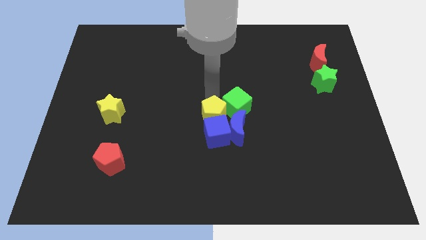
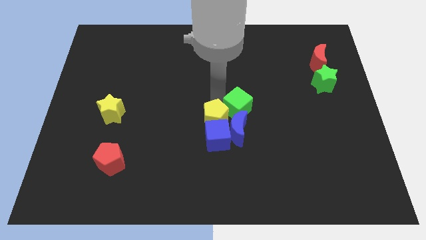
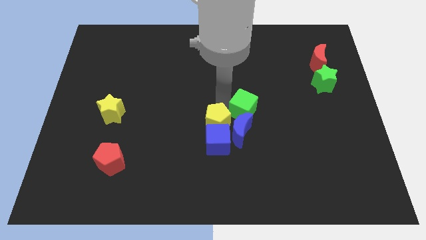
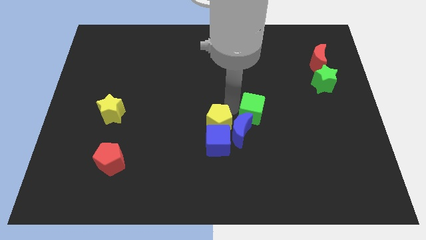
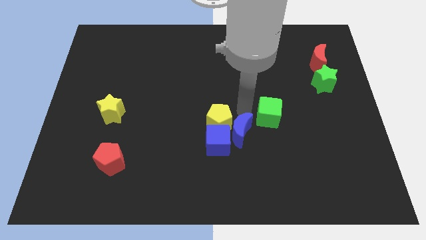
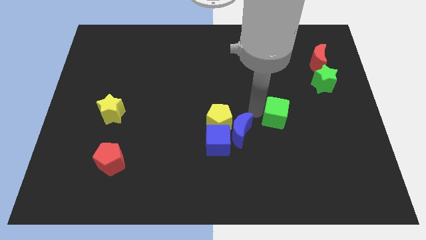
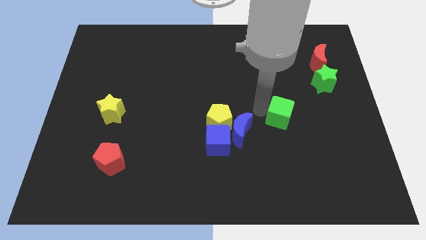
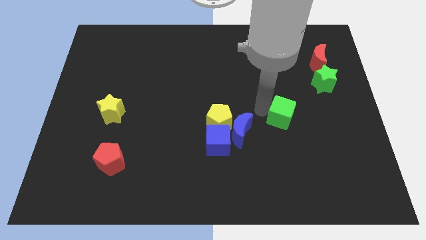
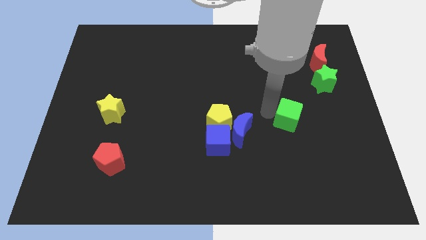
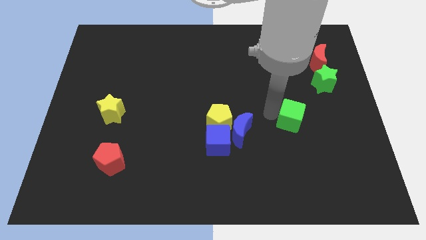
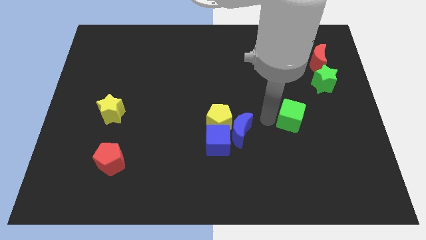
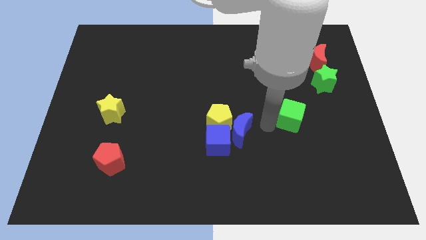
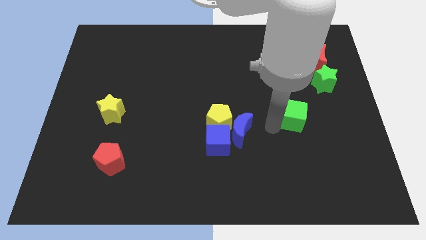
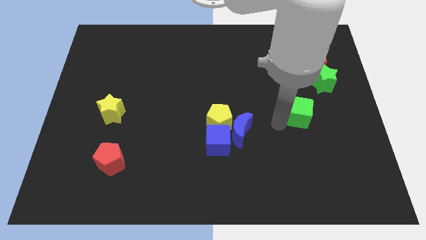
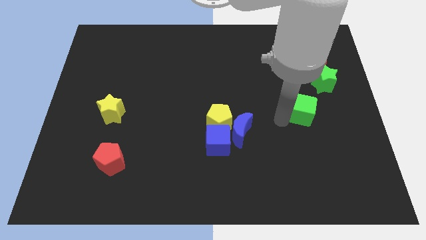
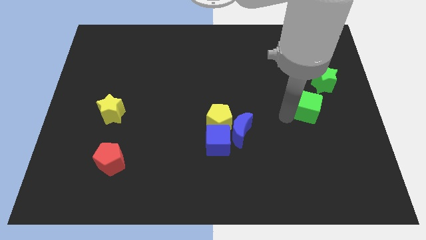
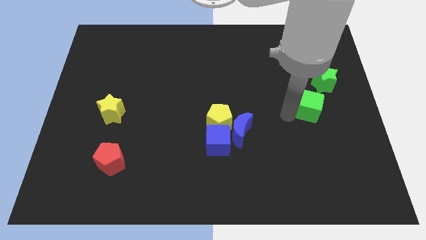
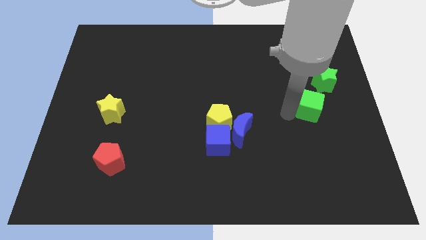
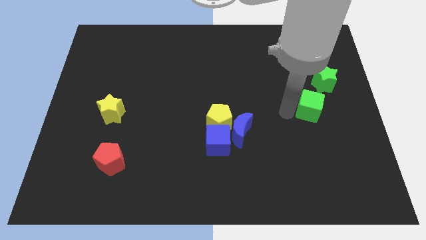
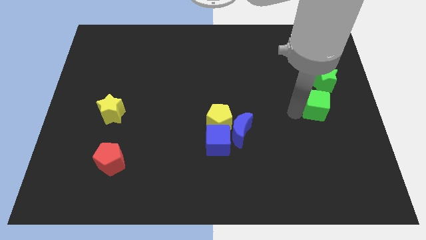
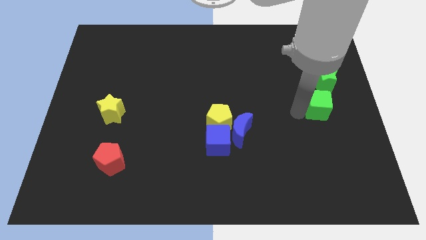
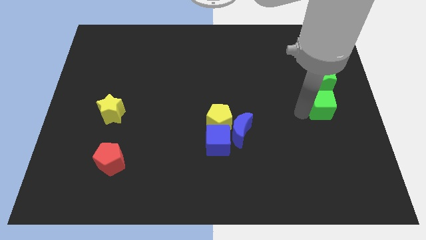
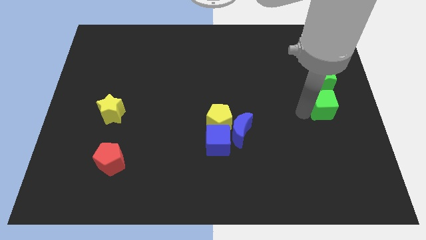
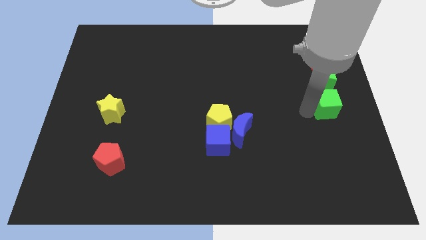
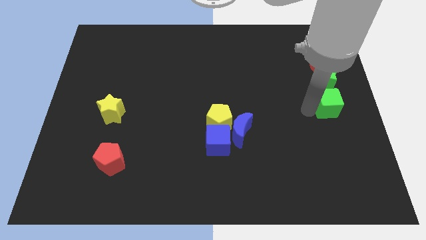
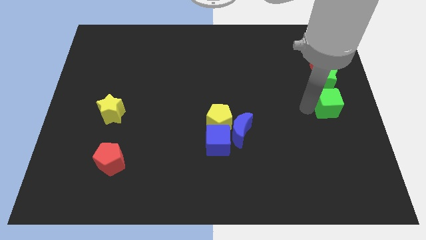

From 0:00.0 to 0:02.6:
place green cube below the green star

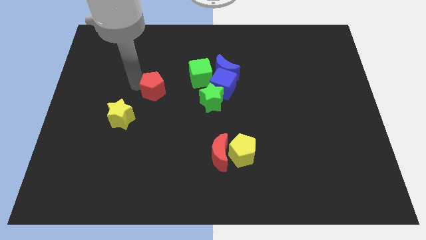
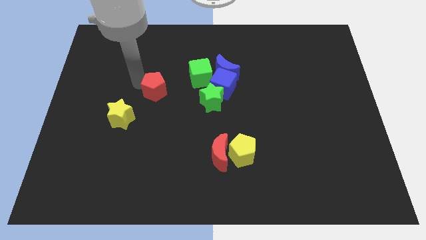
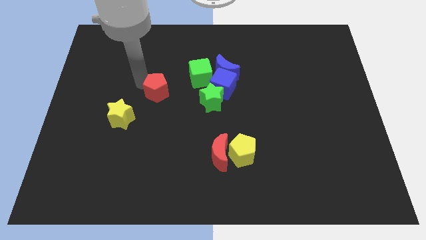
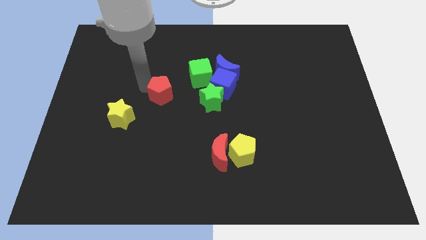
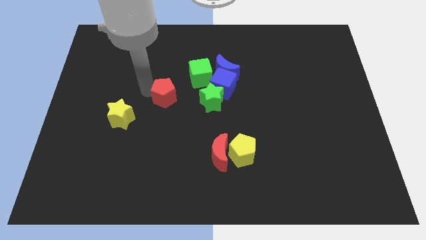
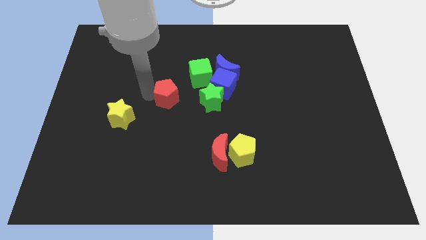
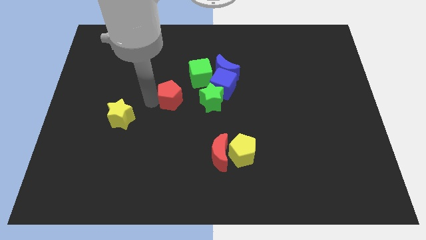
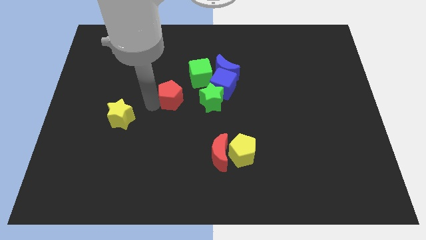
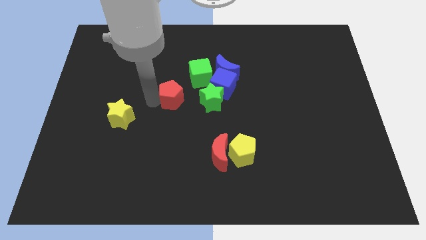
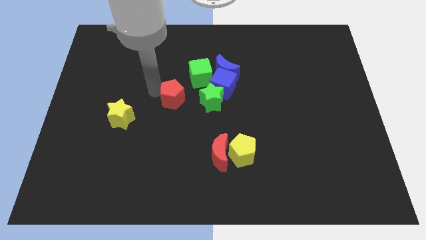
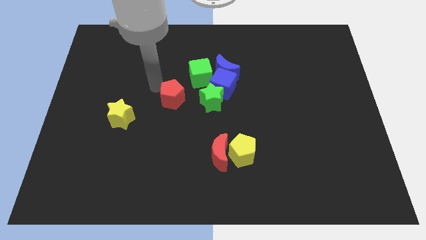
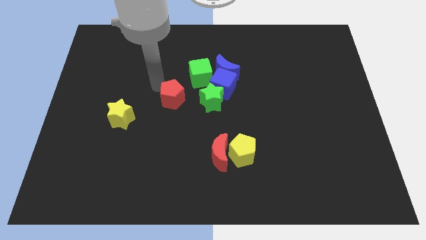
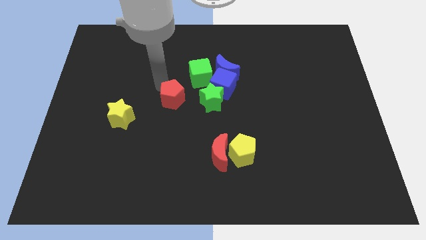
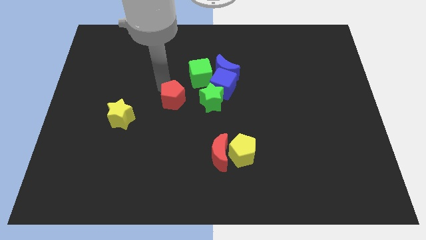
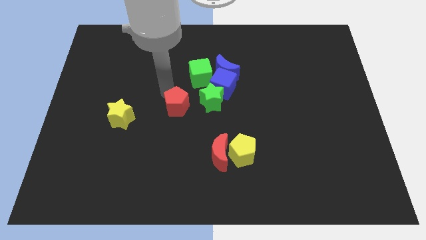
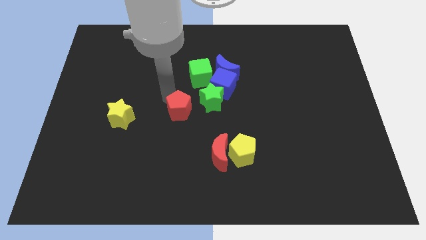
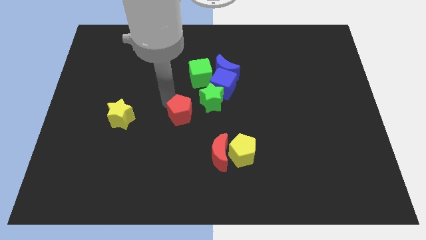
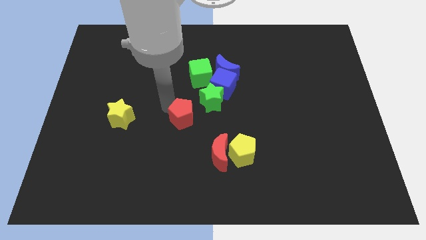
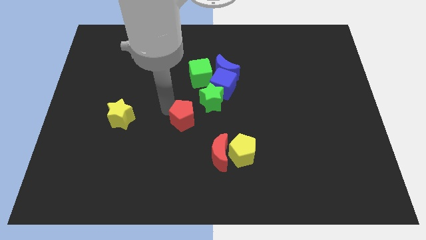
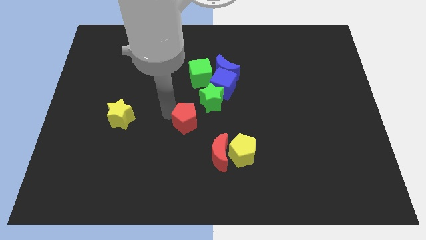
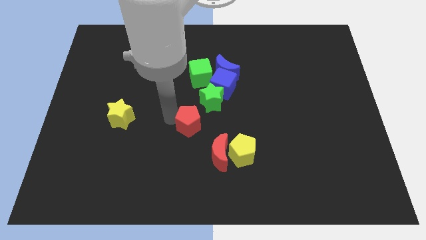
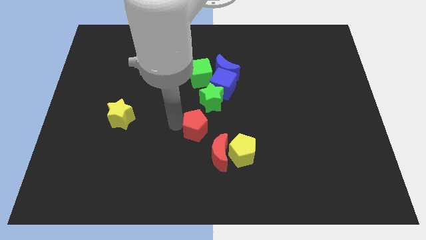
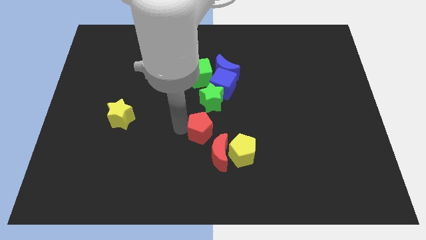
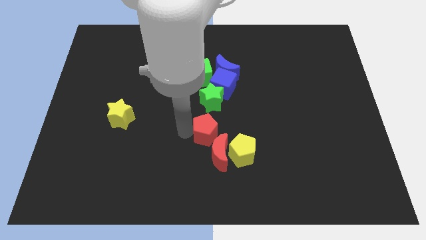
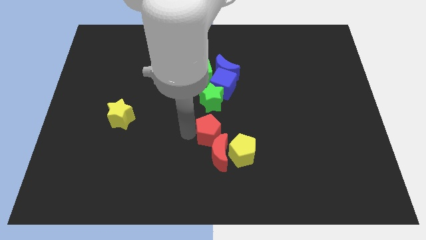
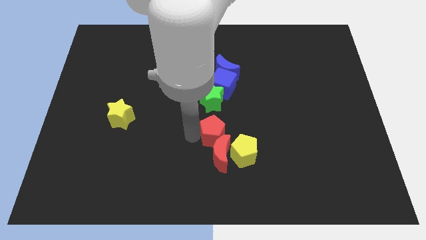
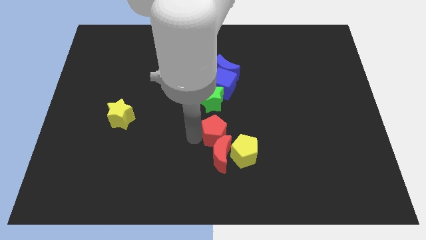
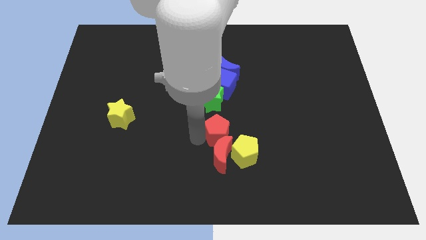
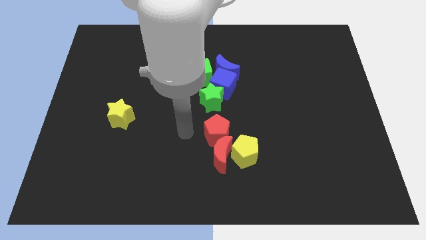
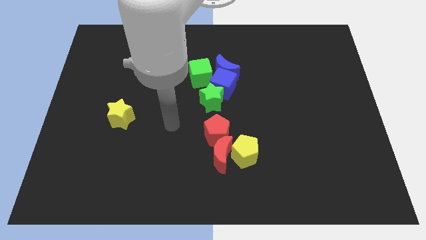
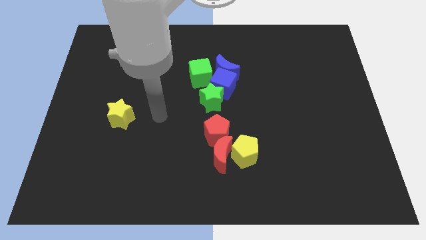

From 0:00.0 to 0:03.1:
place the red pentagon vertically above the red moon

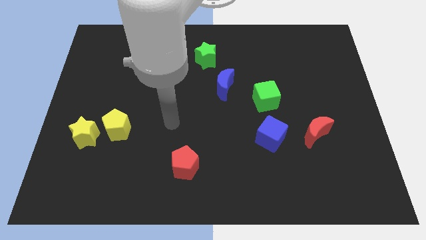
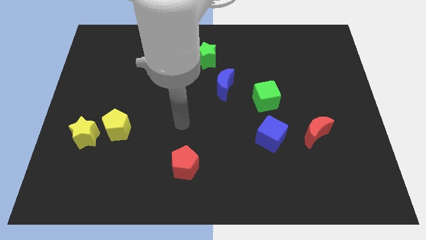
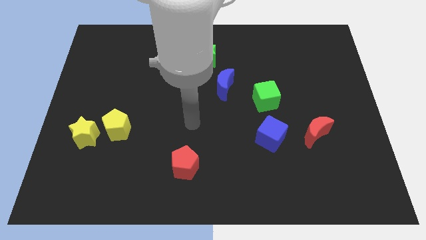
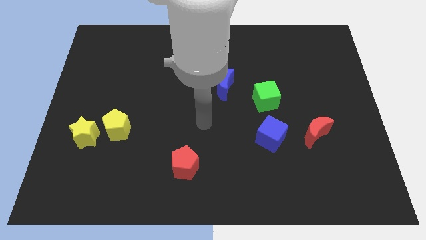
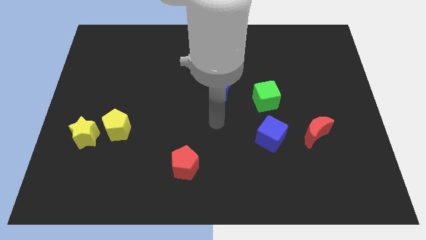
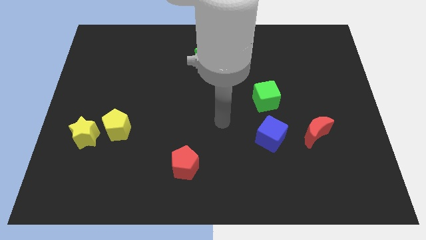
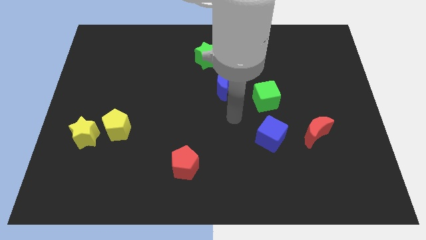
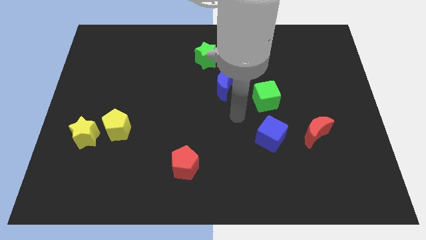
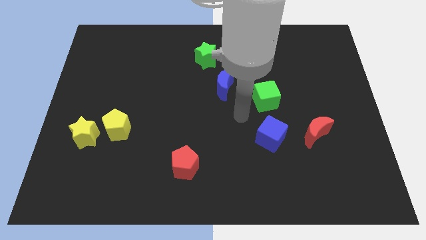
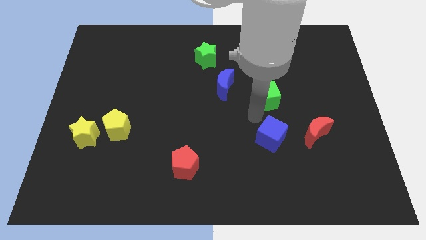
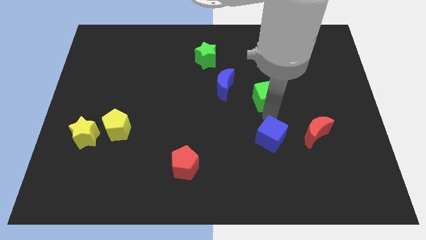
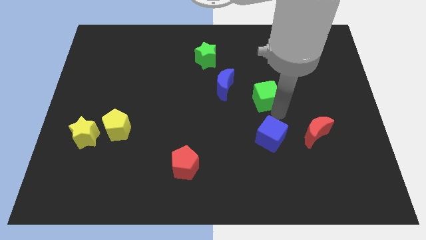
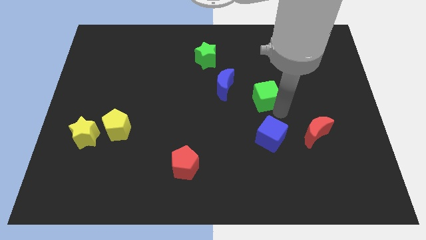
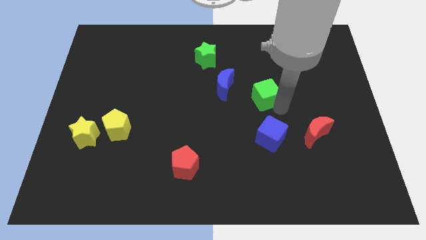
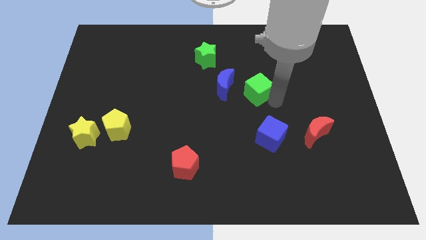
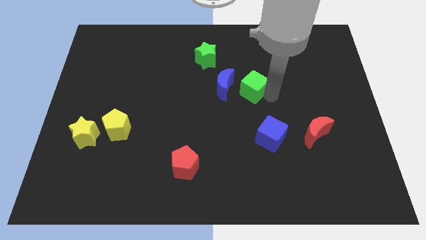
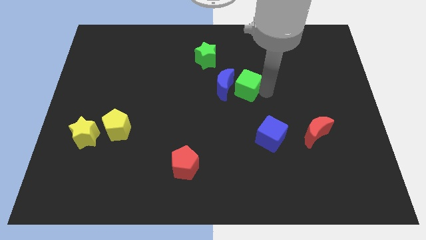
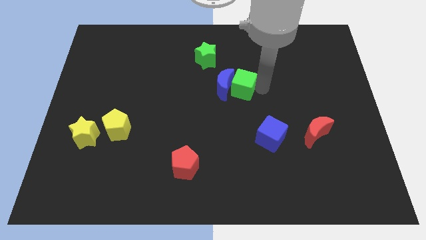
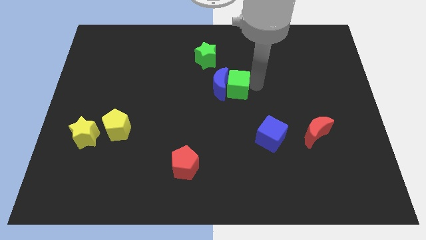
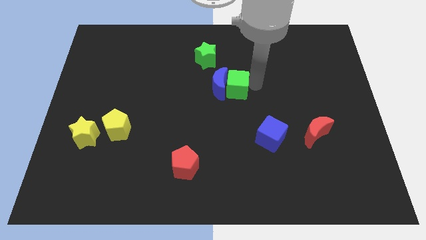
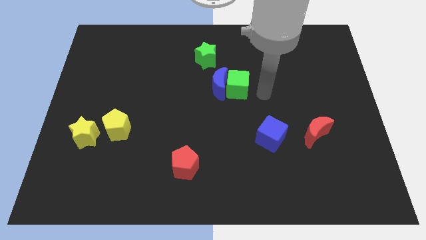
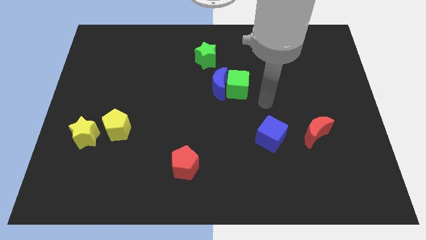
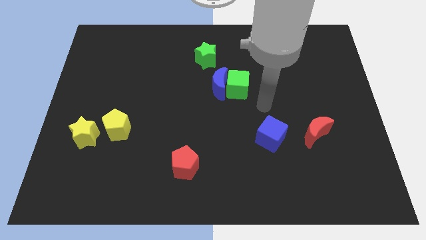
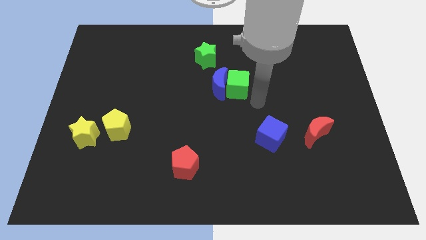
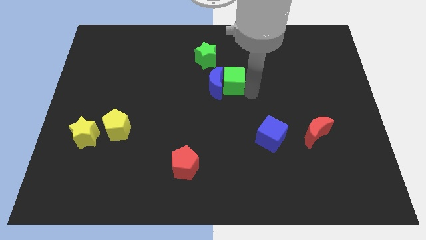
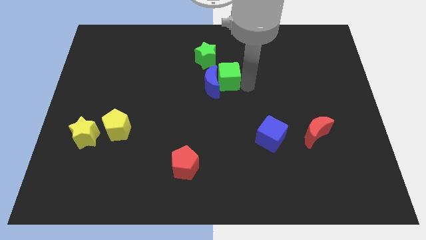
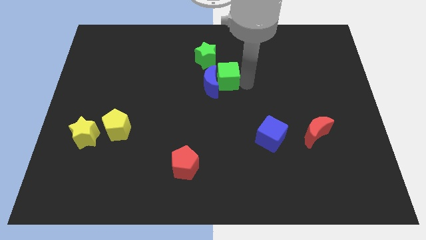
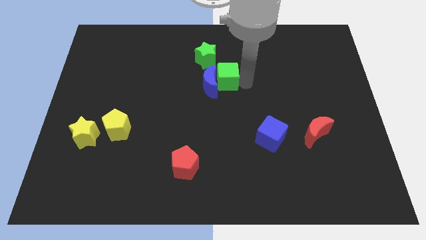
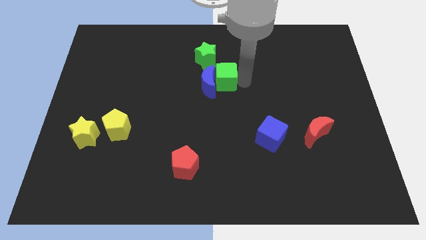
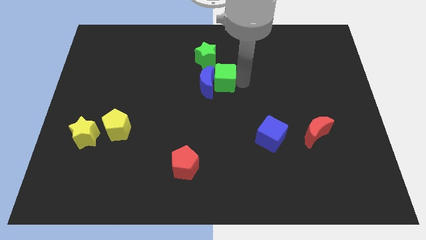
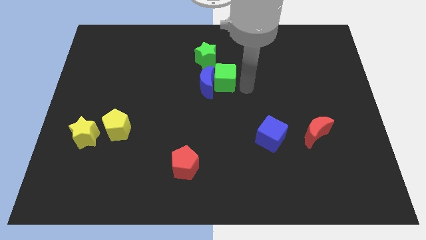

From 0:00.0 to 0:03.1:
push the green cube into the blue crescent
